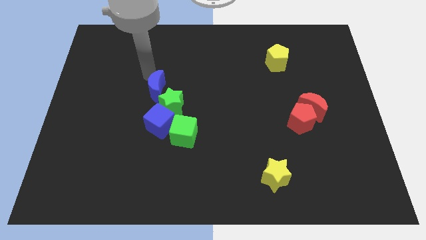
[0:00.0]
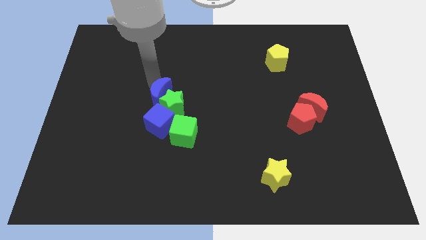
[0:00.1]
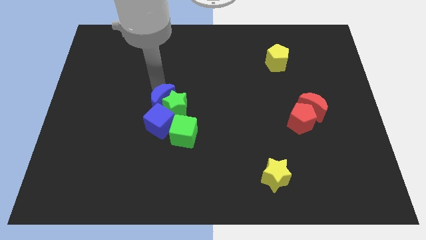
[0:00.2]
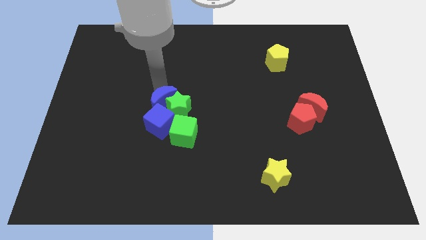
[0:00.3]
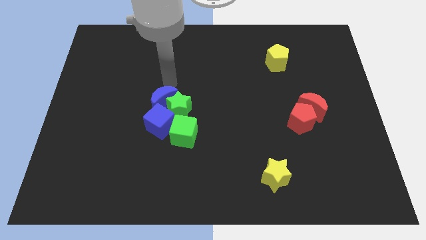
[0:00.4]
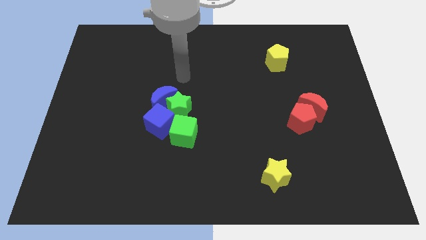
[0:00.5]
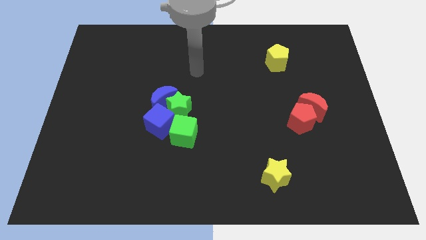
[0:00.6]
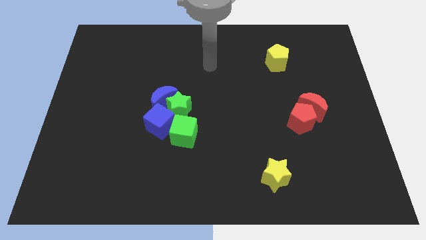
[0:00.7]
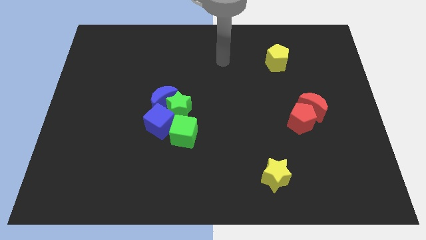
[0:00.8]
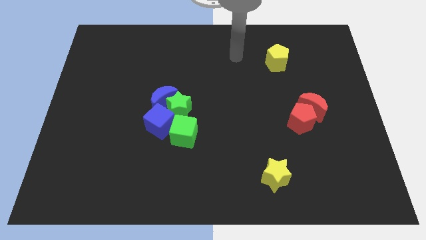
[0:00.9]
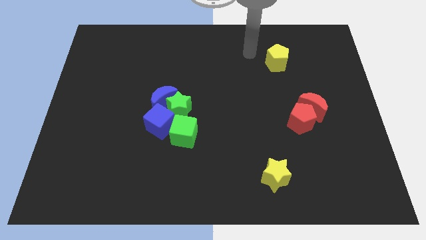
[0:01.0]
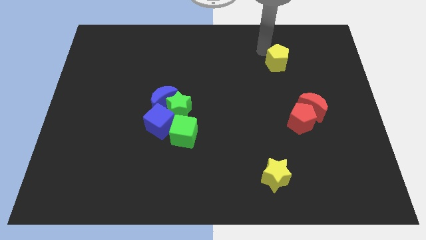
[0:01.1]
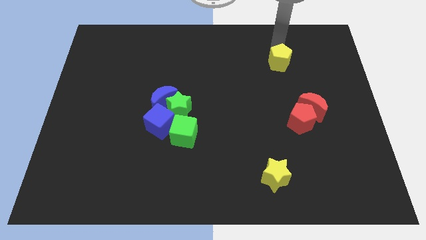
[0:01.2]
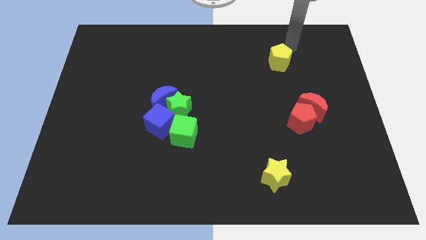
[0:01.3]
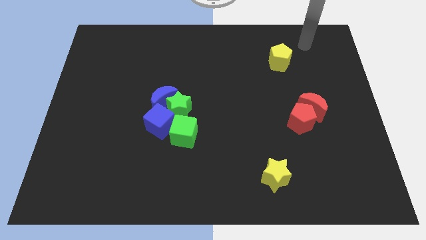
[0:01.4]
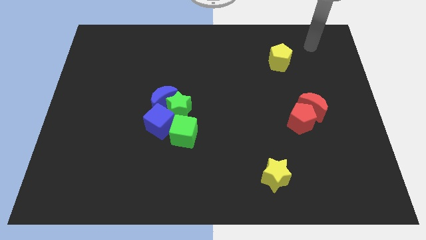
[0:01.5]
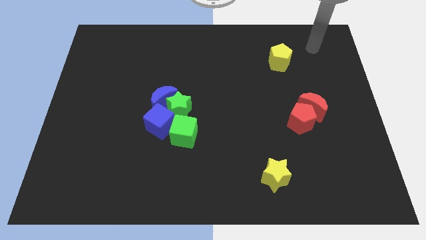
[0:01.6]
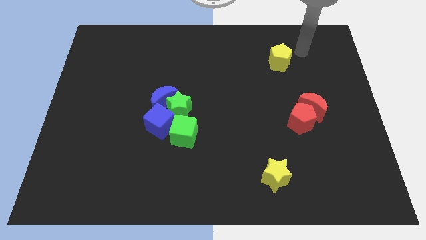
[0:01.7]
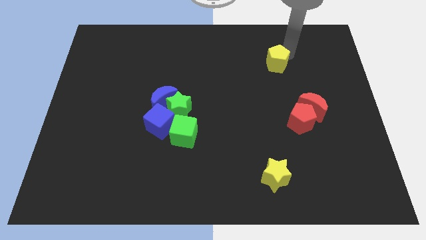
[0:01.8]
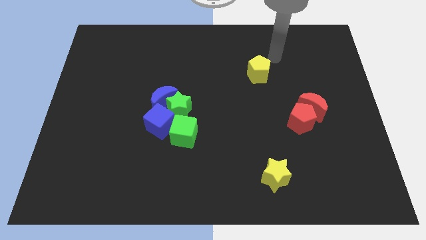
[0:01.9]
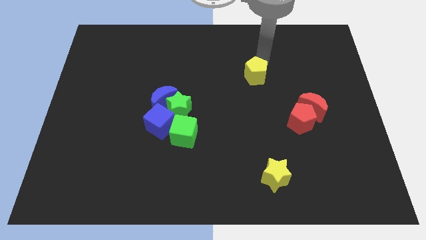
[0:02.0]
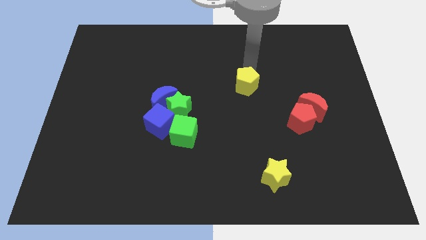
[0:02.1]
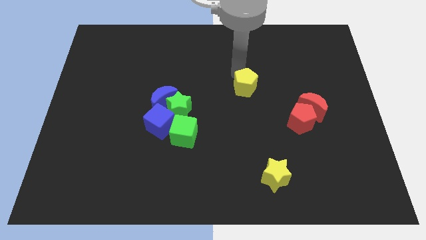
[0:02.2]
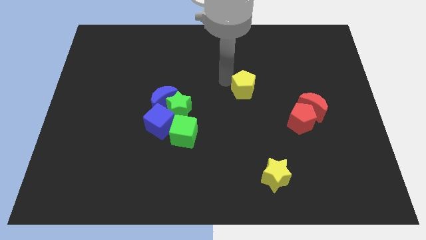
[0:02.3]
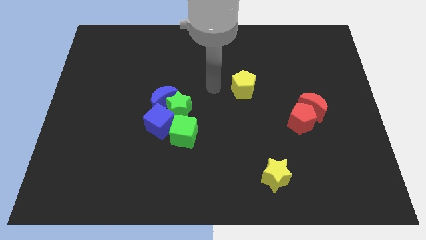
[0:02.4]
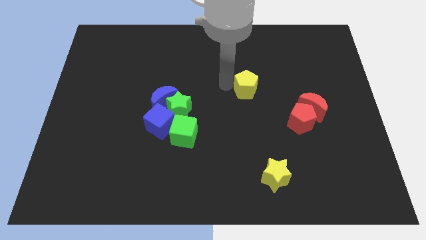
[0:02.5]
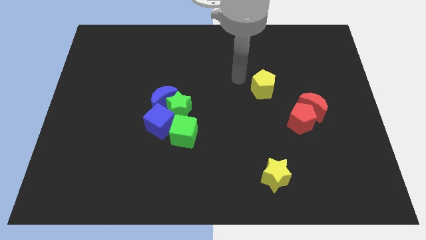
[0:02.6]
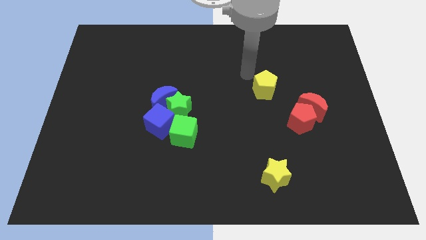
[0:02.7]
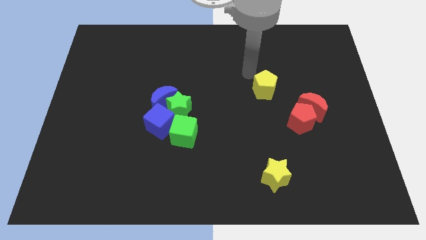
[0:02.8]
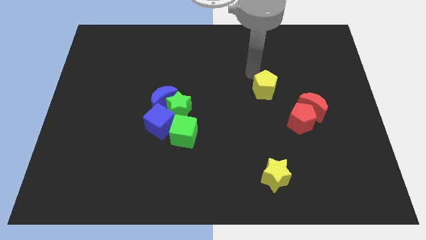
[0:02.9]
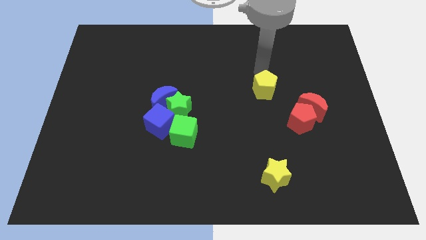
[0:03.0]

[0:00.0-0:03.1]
place the yellow pentagon vertically above the yellow star

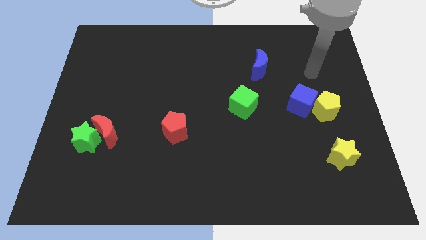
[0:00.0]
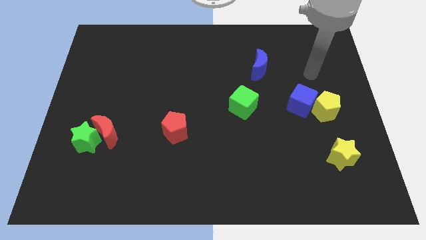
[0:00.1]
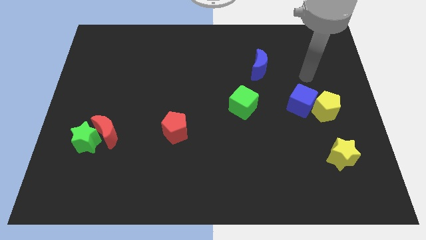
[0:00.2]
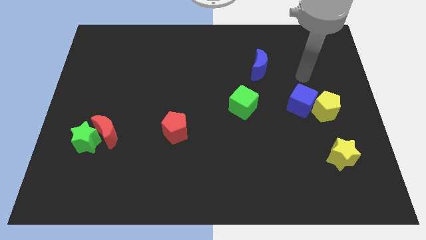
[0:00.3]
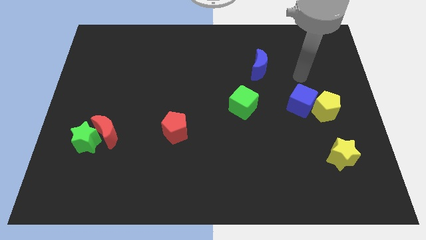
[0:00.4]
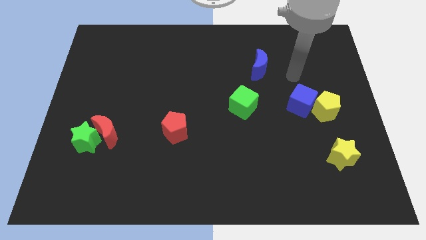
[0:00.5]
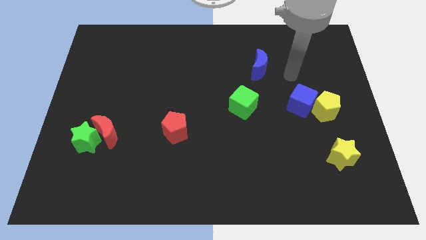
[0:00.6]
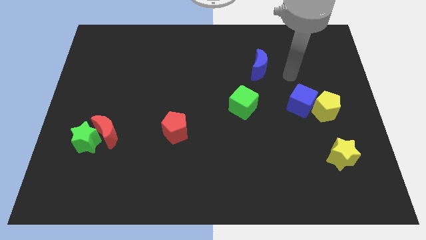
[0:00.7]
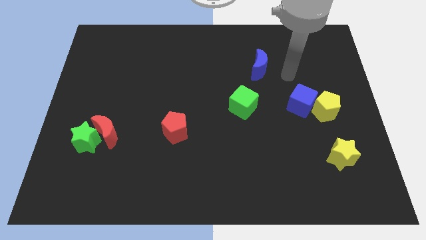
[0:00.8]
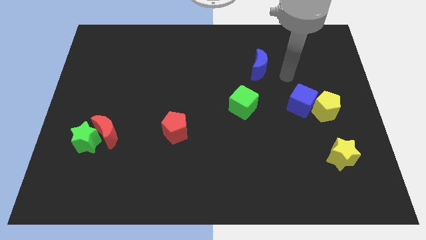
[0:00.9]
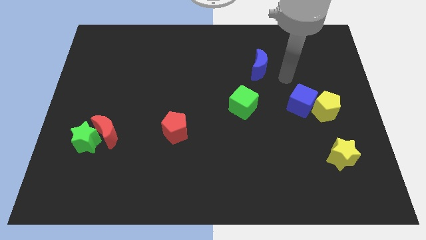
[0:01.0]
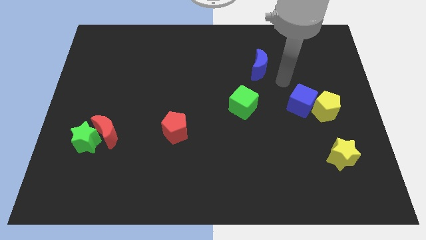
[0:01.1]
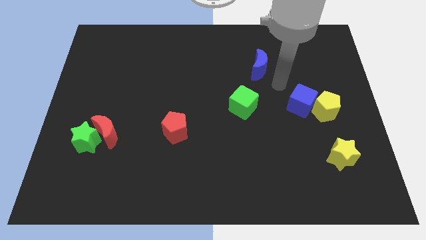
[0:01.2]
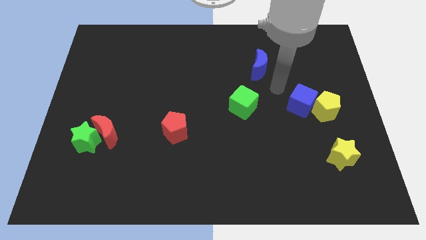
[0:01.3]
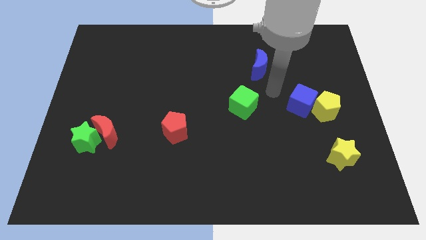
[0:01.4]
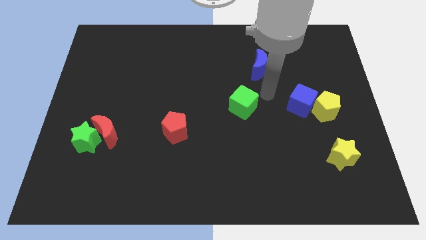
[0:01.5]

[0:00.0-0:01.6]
place your arm to the bottom of blue moon

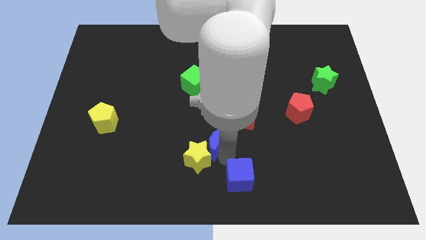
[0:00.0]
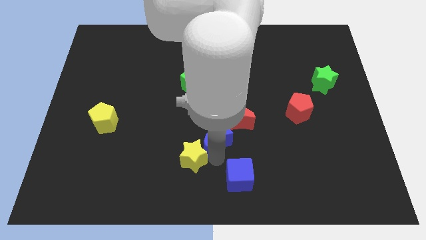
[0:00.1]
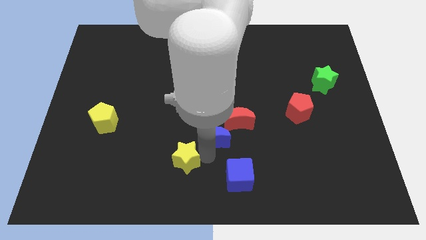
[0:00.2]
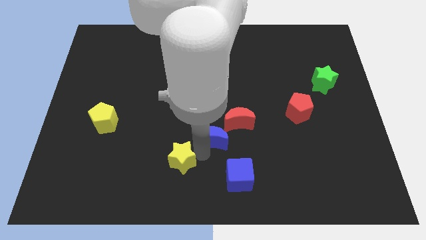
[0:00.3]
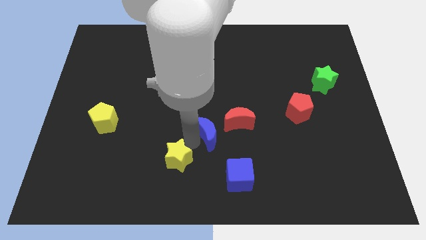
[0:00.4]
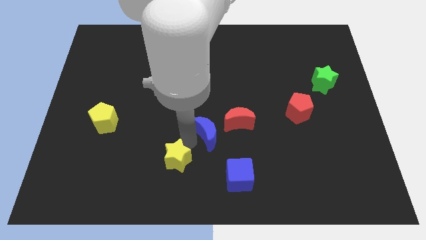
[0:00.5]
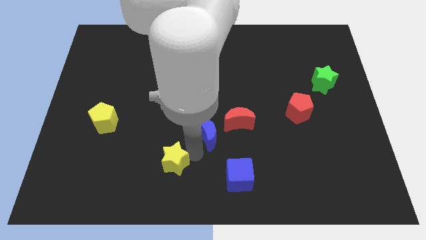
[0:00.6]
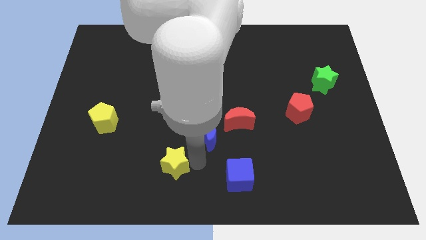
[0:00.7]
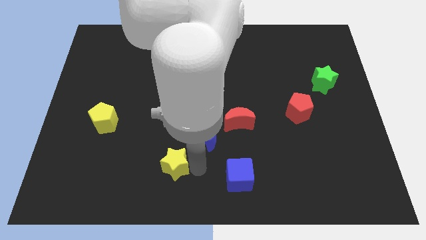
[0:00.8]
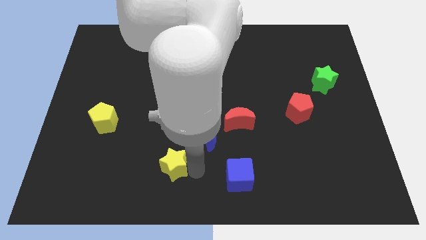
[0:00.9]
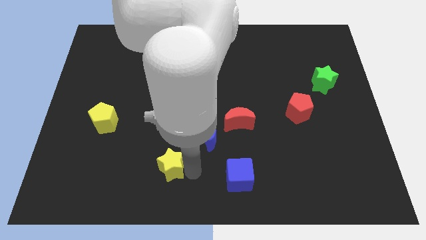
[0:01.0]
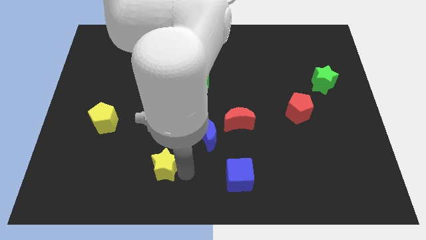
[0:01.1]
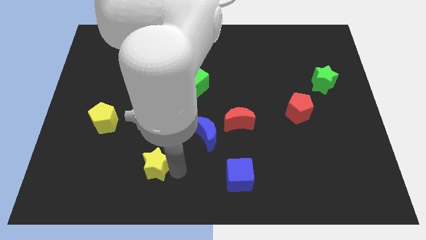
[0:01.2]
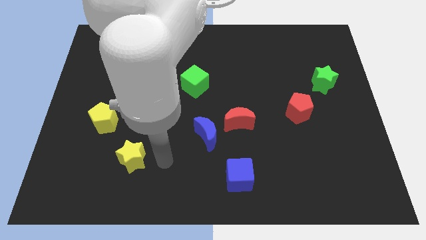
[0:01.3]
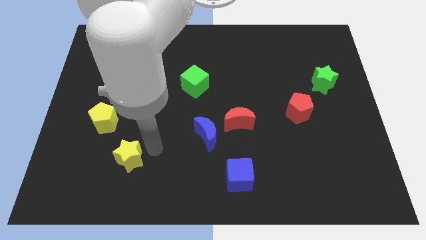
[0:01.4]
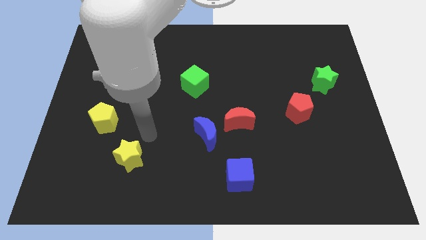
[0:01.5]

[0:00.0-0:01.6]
place the yellow star horizontally to the left side of the blue crescent

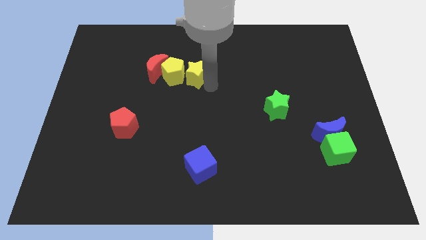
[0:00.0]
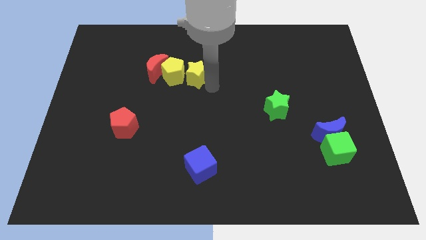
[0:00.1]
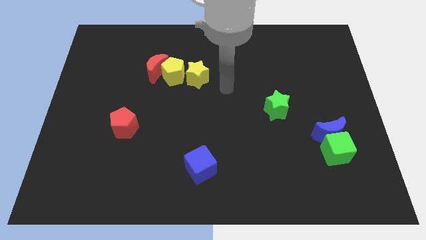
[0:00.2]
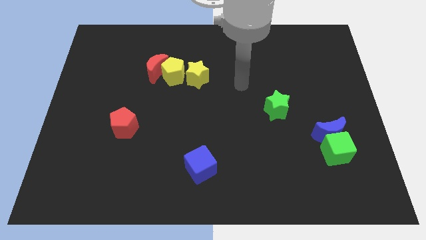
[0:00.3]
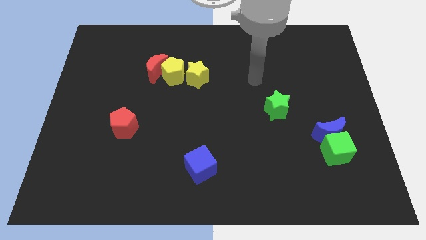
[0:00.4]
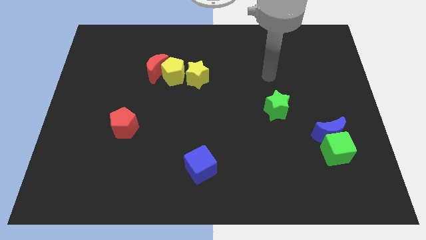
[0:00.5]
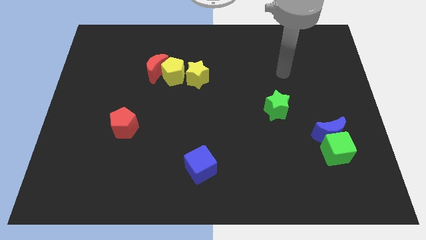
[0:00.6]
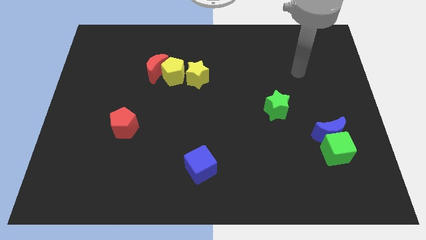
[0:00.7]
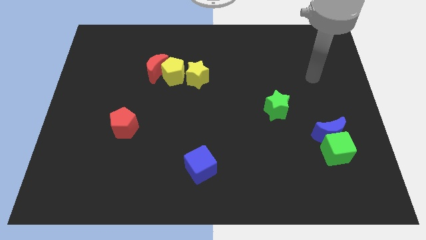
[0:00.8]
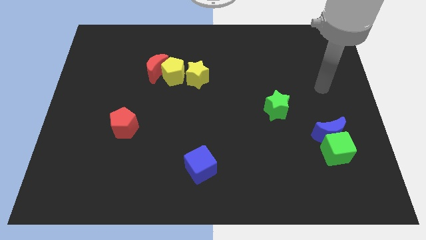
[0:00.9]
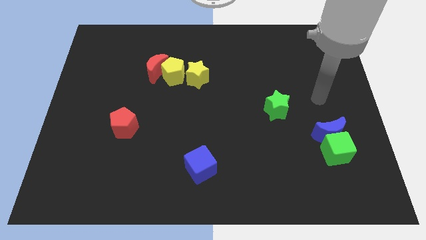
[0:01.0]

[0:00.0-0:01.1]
move your arm away from the yellow star

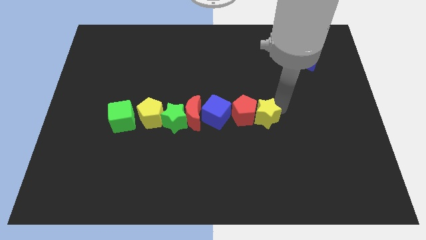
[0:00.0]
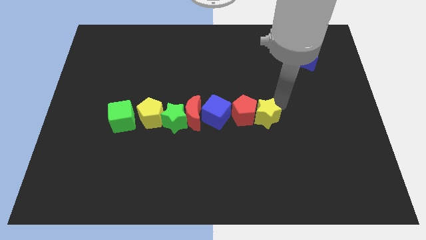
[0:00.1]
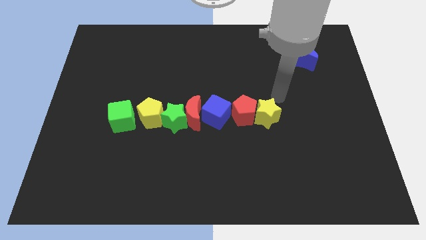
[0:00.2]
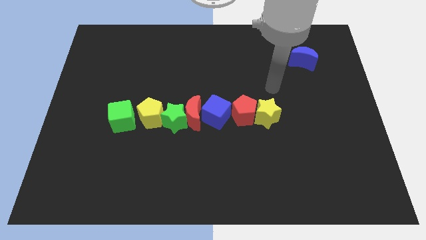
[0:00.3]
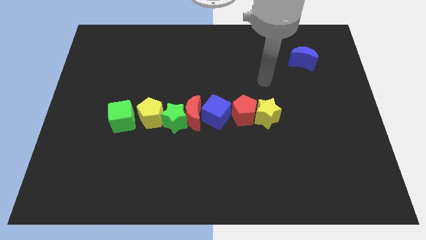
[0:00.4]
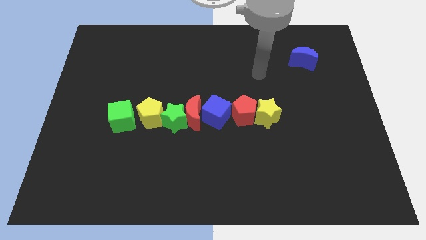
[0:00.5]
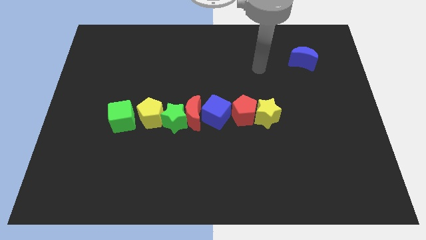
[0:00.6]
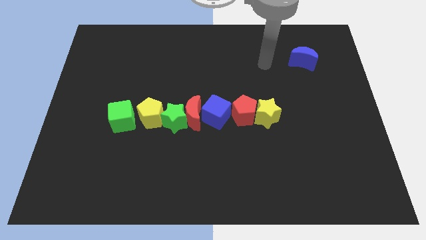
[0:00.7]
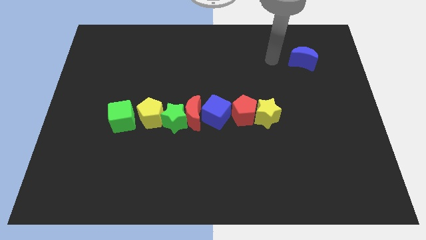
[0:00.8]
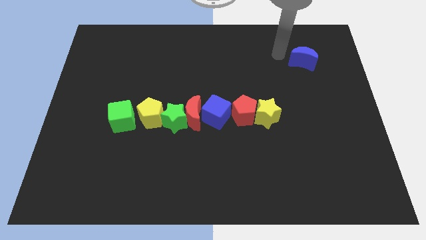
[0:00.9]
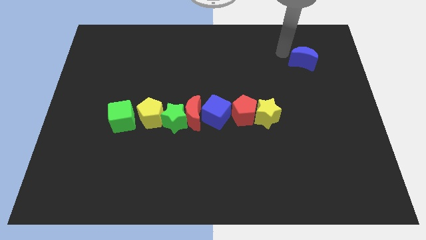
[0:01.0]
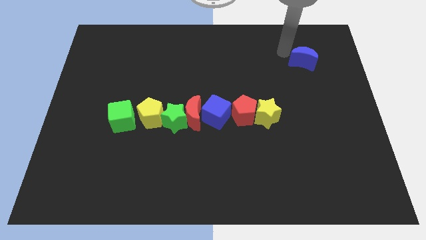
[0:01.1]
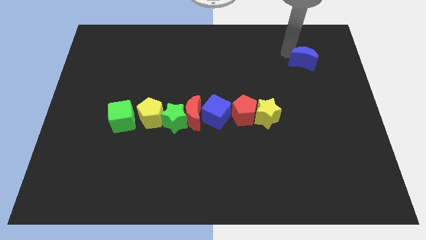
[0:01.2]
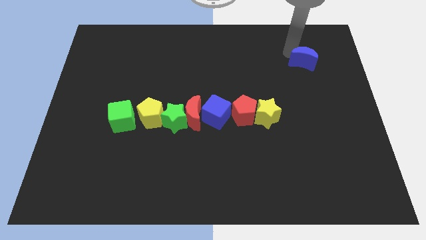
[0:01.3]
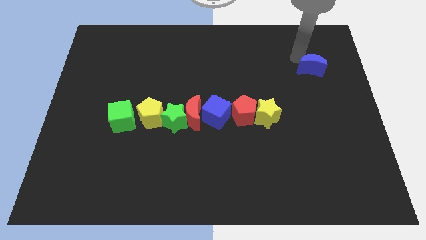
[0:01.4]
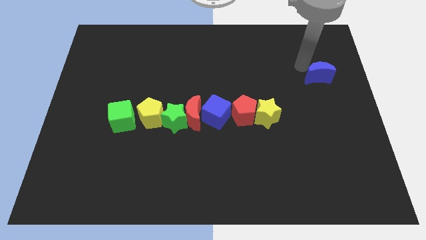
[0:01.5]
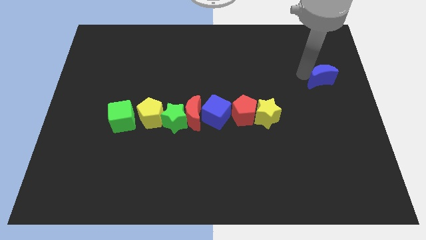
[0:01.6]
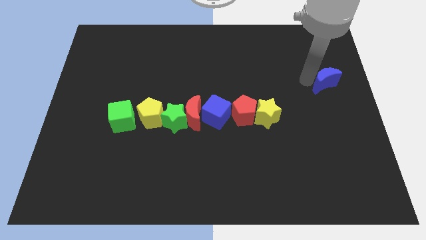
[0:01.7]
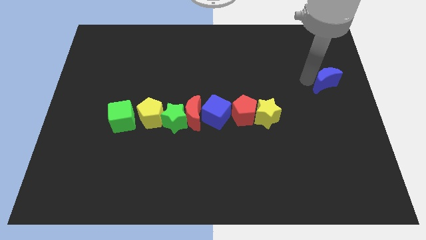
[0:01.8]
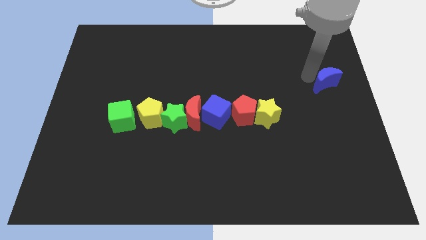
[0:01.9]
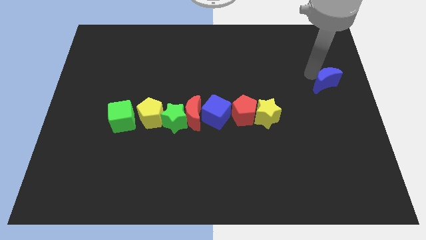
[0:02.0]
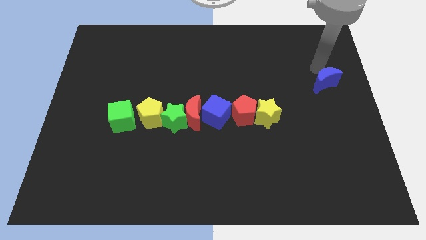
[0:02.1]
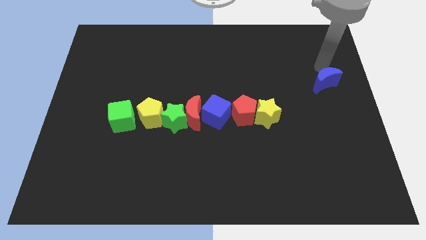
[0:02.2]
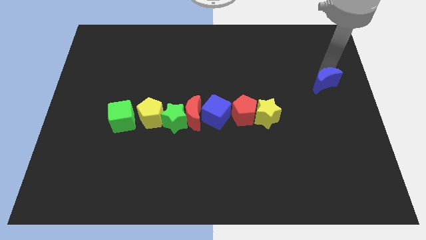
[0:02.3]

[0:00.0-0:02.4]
place the blue moon diagonally top right to the yellow star
